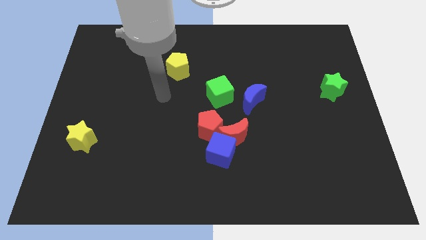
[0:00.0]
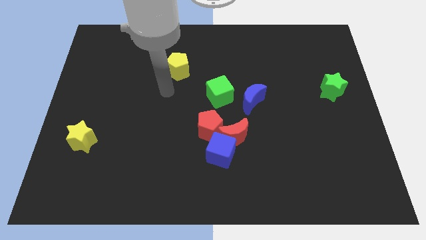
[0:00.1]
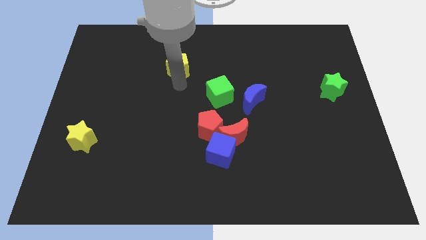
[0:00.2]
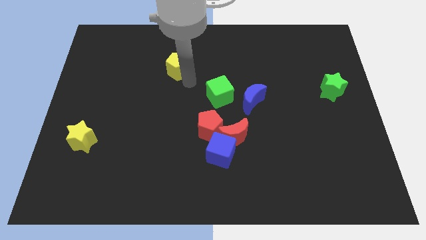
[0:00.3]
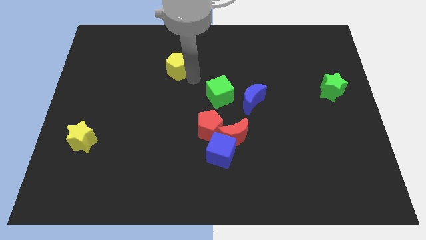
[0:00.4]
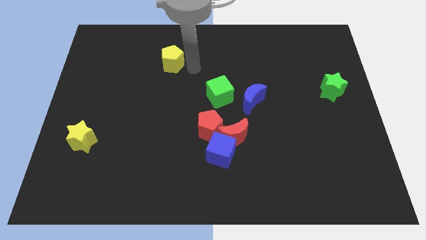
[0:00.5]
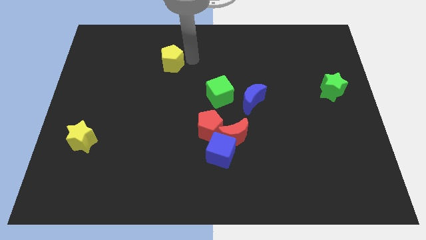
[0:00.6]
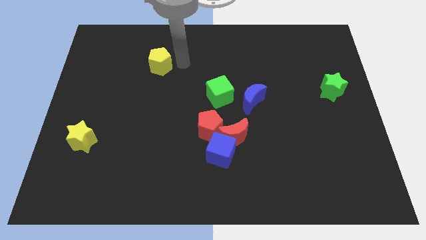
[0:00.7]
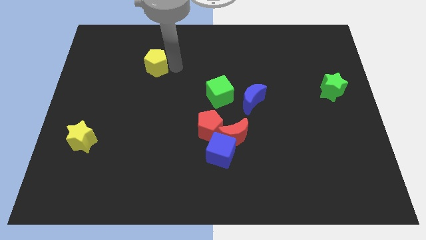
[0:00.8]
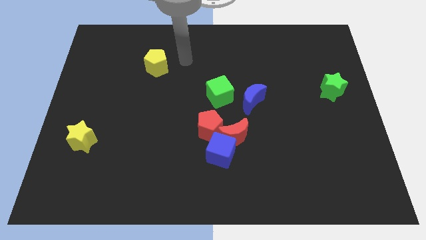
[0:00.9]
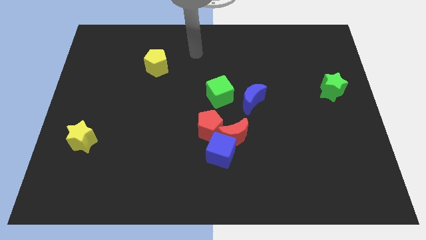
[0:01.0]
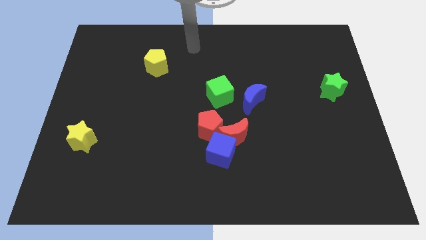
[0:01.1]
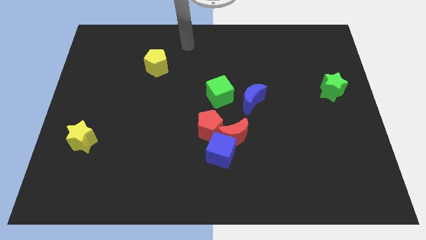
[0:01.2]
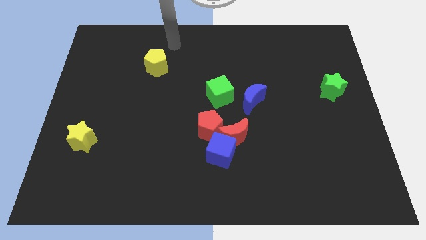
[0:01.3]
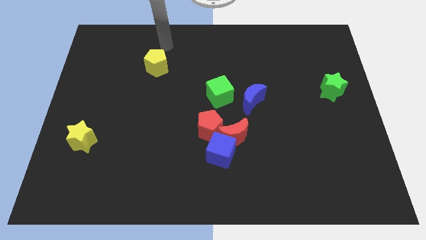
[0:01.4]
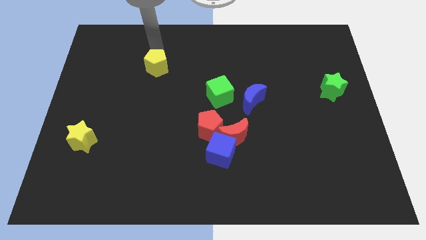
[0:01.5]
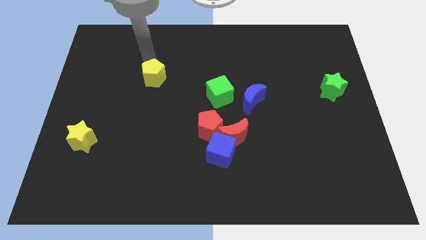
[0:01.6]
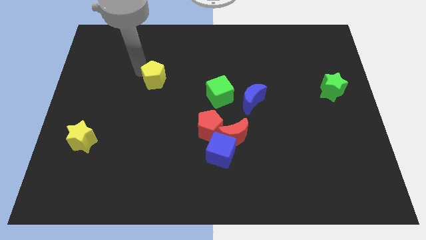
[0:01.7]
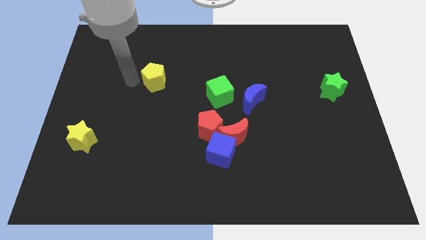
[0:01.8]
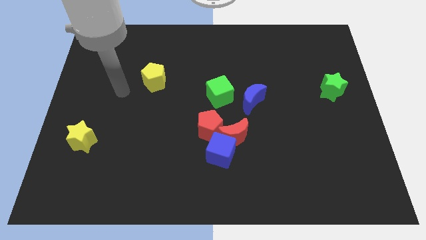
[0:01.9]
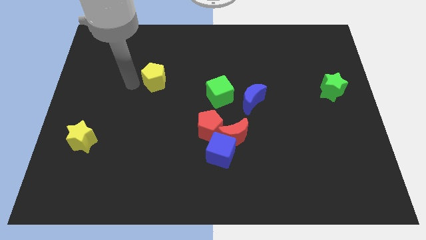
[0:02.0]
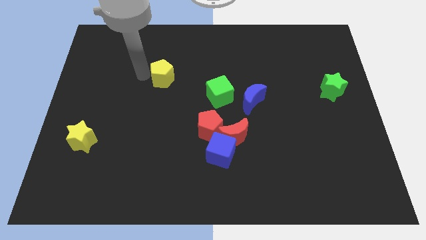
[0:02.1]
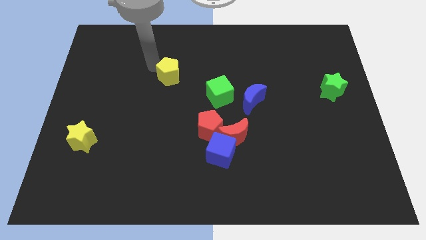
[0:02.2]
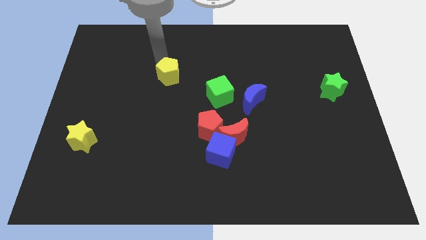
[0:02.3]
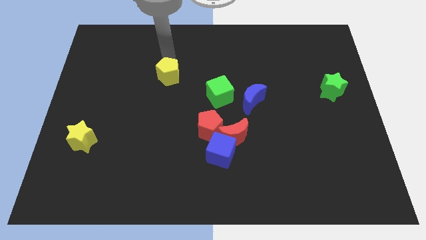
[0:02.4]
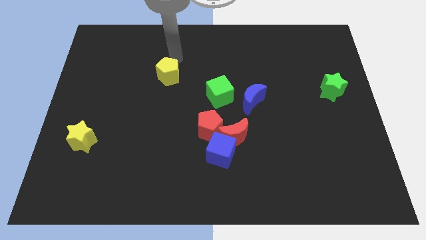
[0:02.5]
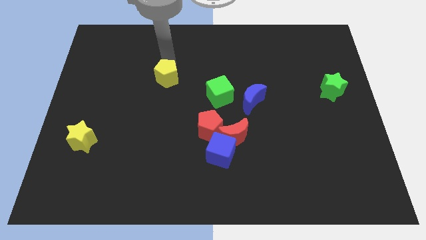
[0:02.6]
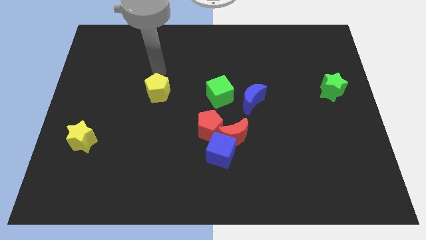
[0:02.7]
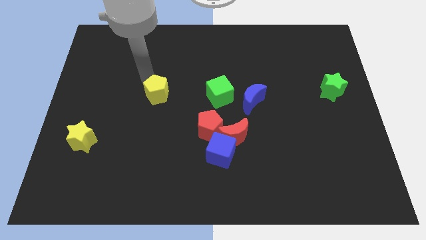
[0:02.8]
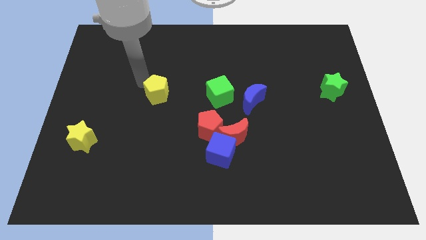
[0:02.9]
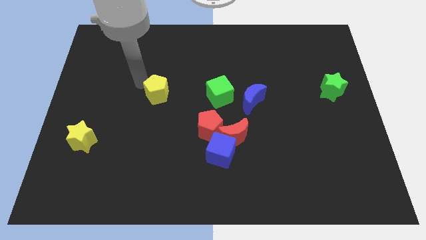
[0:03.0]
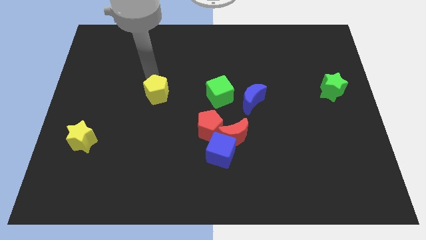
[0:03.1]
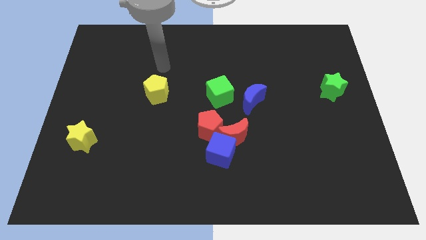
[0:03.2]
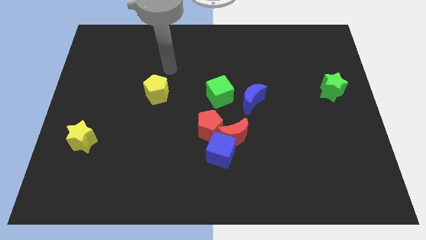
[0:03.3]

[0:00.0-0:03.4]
move the yellow pentagon left to the green cube

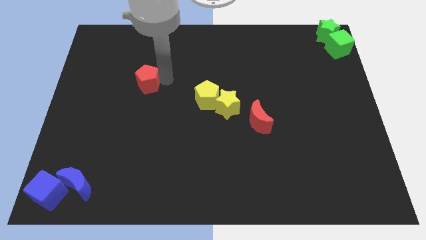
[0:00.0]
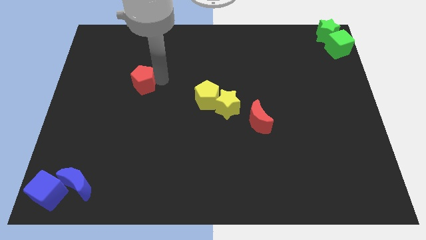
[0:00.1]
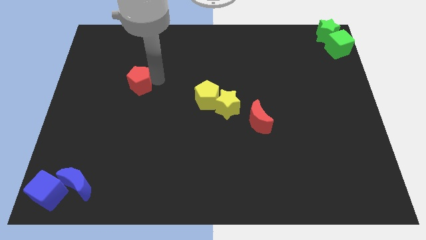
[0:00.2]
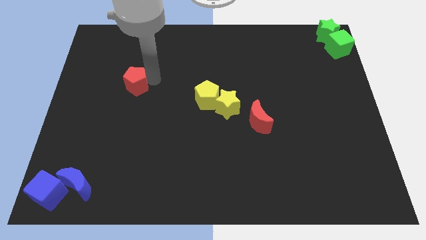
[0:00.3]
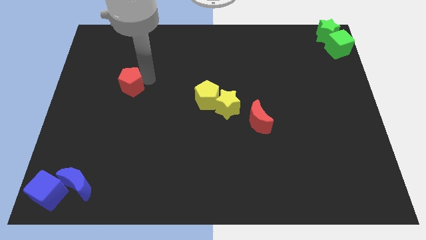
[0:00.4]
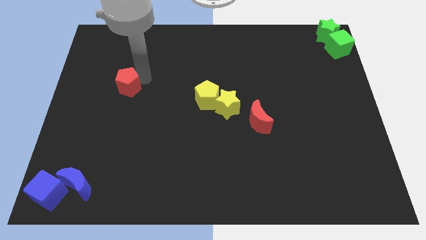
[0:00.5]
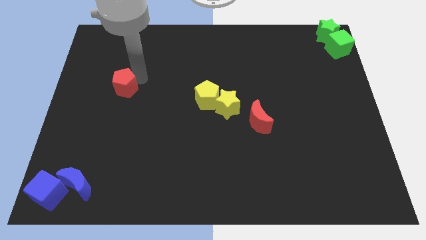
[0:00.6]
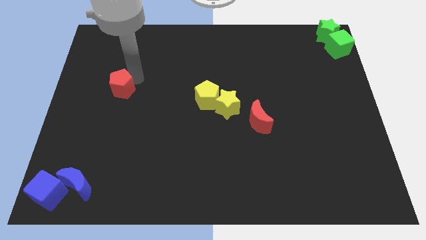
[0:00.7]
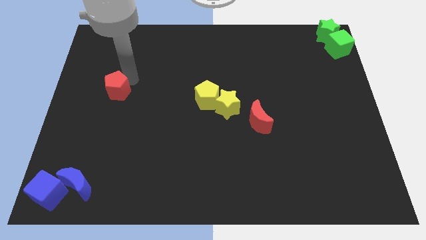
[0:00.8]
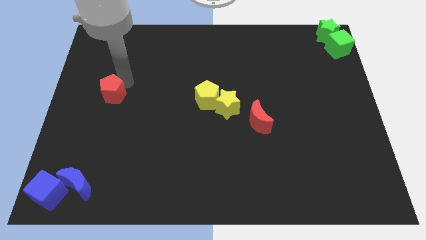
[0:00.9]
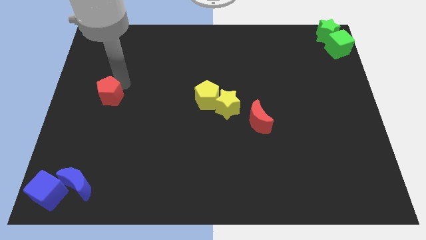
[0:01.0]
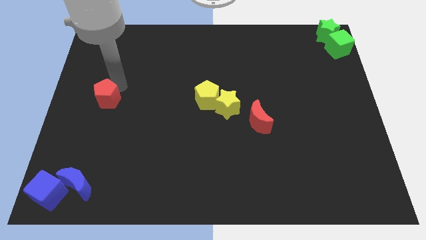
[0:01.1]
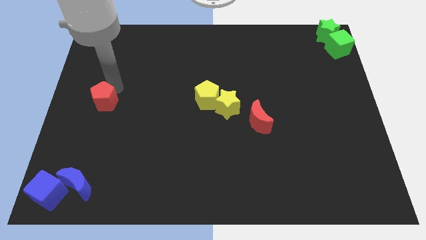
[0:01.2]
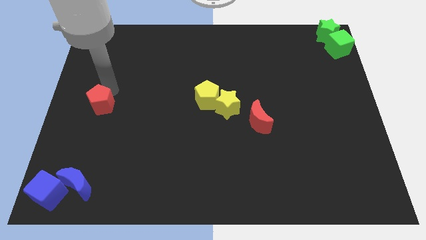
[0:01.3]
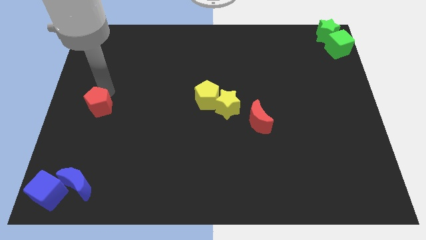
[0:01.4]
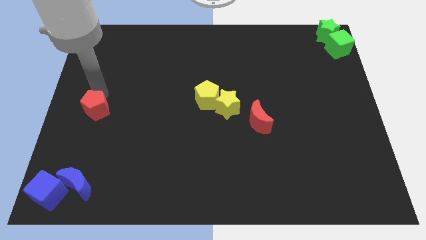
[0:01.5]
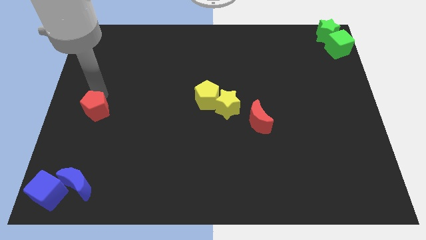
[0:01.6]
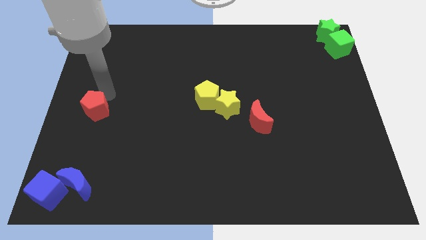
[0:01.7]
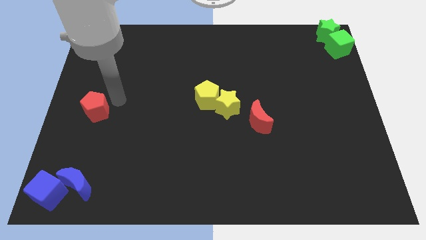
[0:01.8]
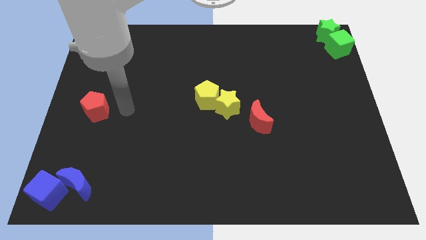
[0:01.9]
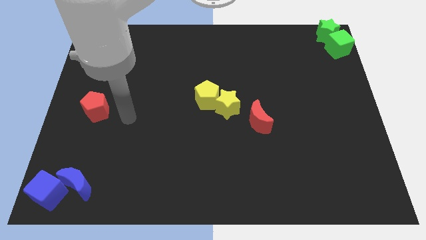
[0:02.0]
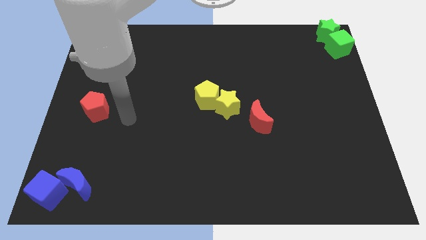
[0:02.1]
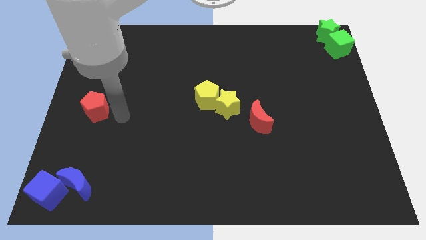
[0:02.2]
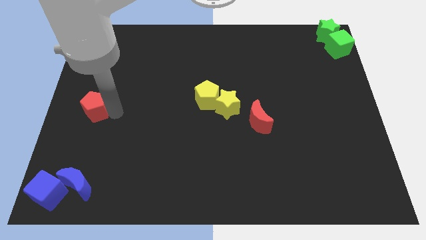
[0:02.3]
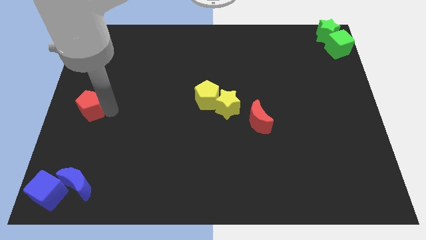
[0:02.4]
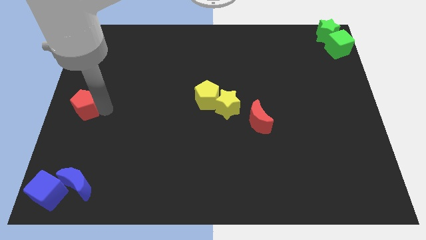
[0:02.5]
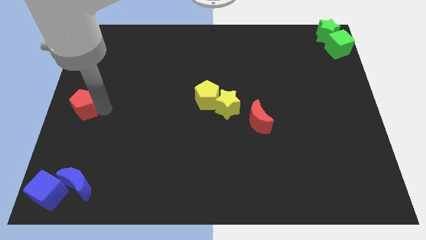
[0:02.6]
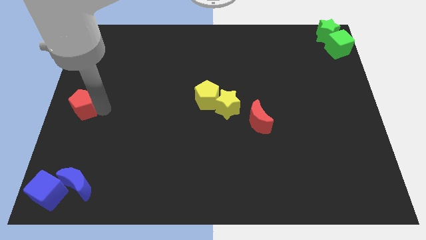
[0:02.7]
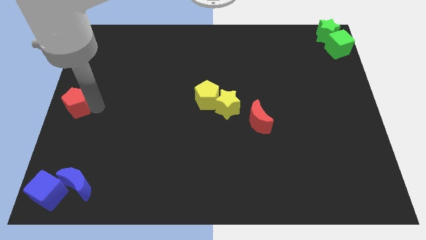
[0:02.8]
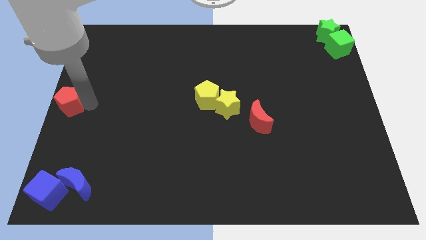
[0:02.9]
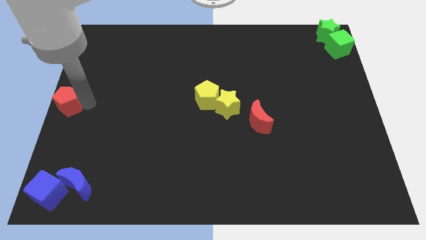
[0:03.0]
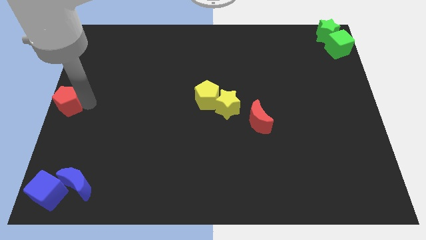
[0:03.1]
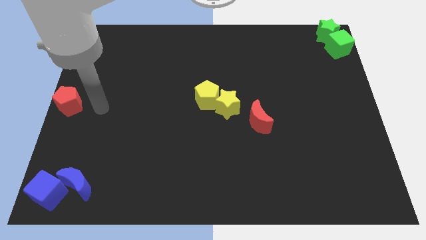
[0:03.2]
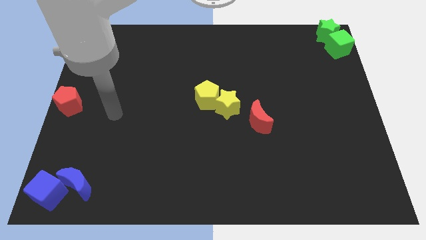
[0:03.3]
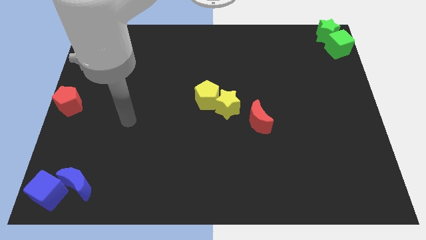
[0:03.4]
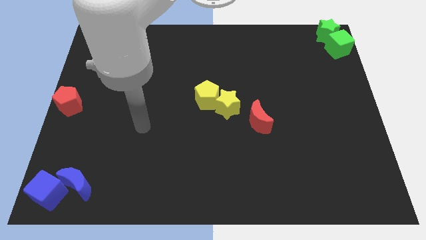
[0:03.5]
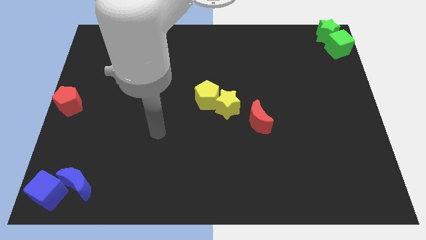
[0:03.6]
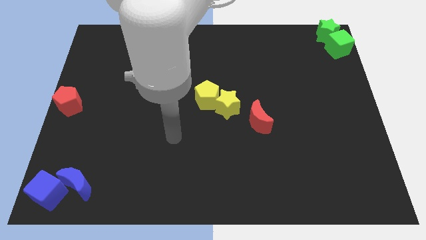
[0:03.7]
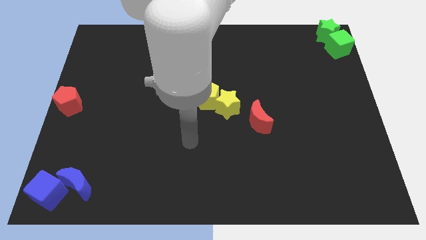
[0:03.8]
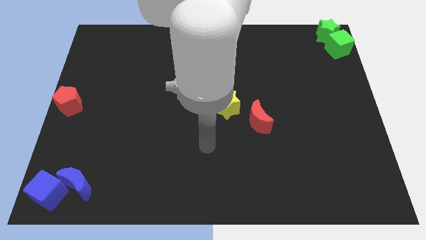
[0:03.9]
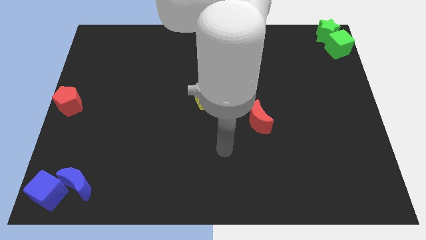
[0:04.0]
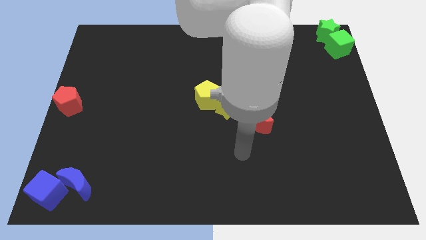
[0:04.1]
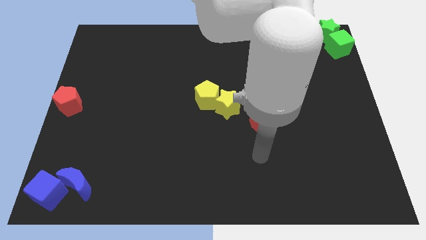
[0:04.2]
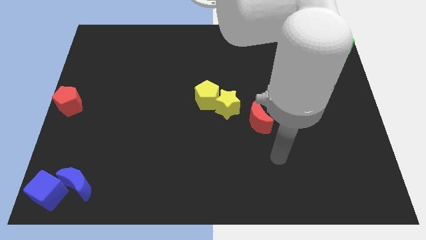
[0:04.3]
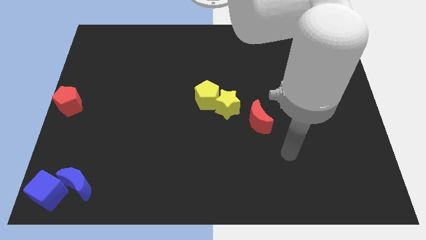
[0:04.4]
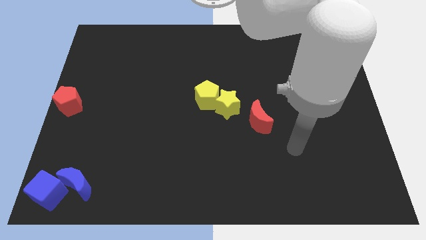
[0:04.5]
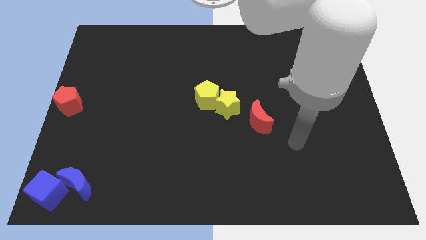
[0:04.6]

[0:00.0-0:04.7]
push the red pentagon towards the left centre

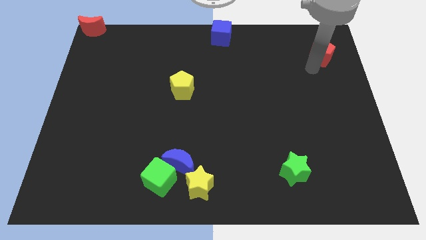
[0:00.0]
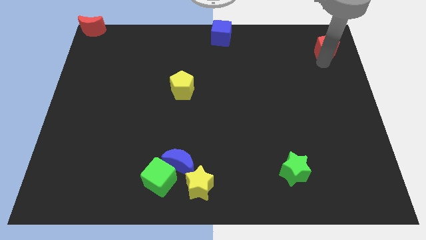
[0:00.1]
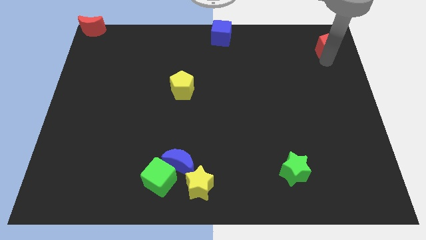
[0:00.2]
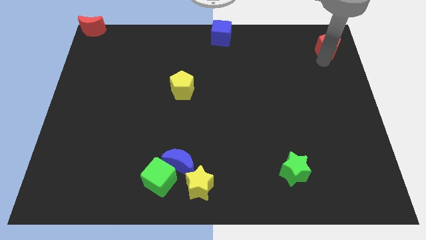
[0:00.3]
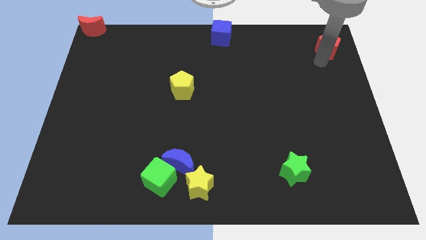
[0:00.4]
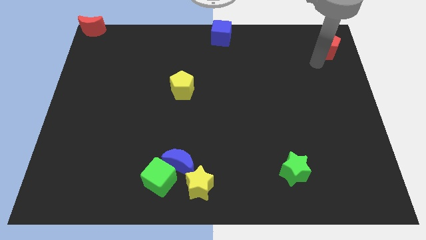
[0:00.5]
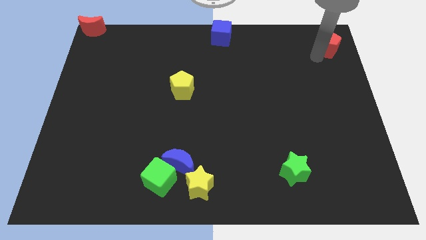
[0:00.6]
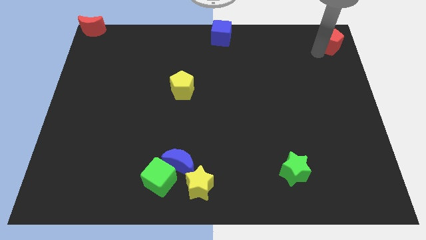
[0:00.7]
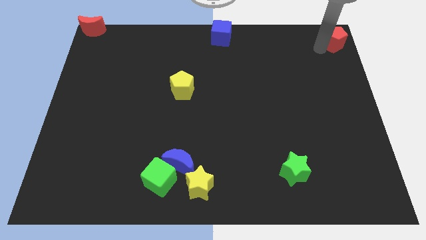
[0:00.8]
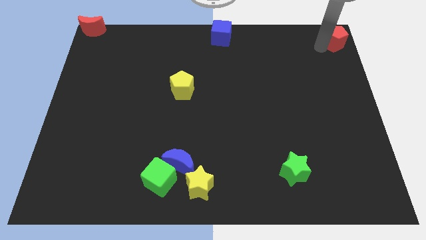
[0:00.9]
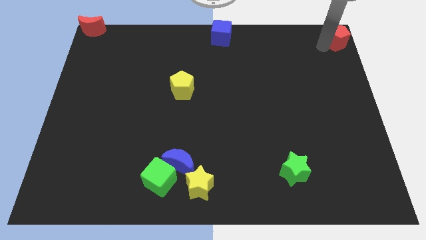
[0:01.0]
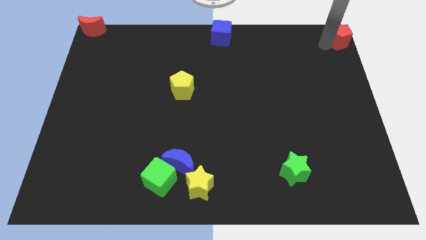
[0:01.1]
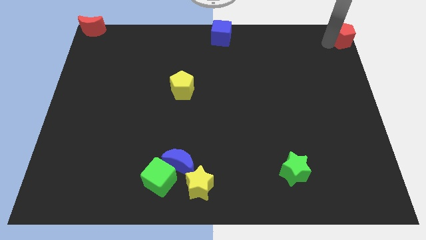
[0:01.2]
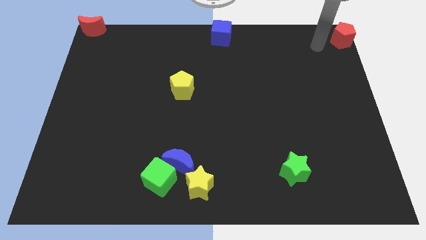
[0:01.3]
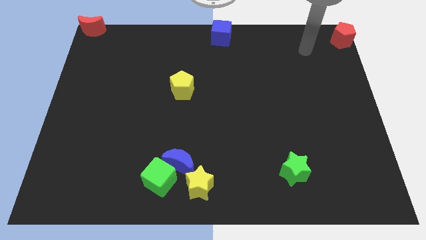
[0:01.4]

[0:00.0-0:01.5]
push the red pentagon to the top right corner of the board
